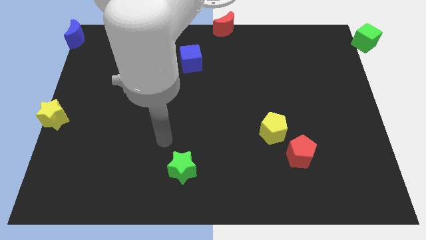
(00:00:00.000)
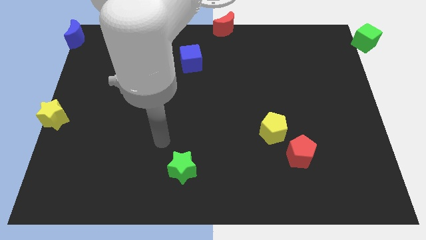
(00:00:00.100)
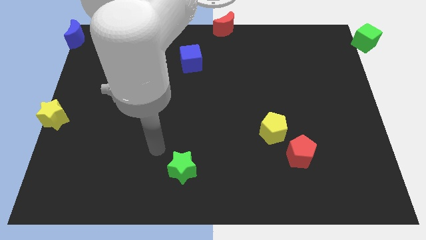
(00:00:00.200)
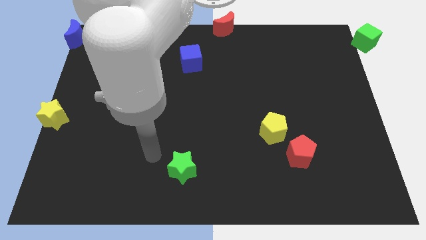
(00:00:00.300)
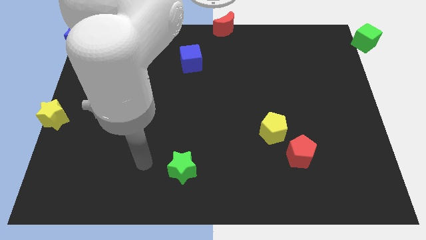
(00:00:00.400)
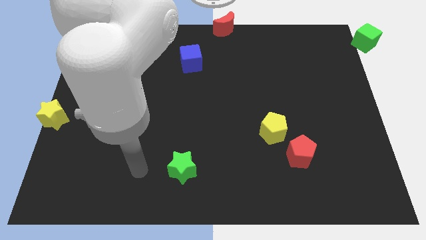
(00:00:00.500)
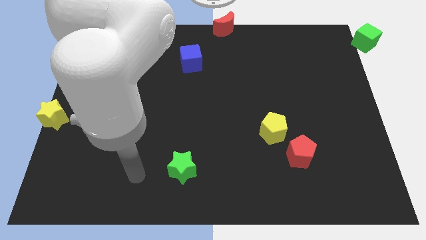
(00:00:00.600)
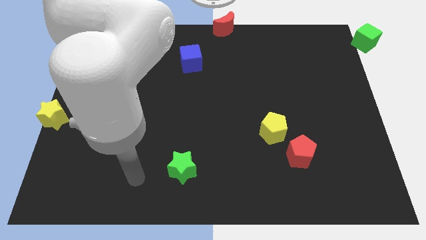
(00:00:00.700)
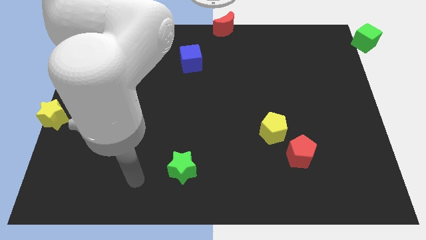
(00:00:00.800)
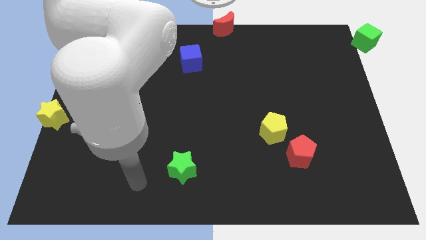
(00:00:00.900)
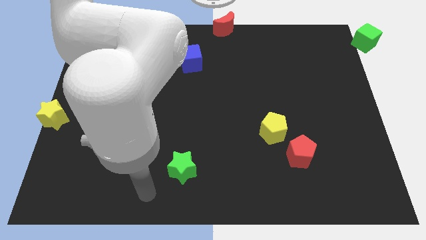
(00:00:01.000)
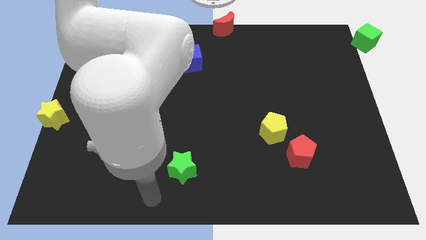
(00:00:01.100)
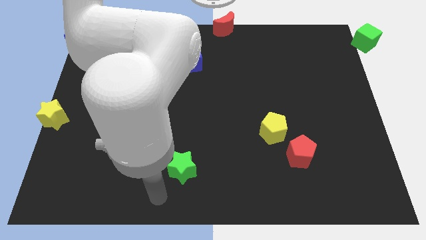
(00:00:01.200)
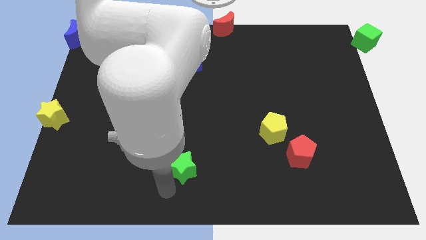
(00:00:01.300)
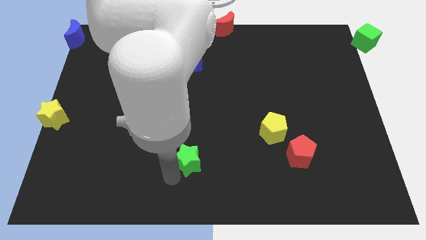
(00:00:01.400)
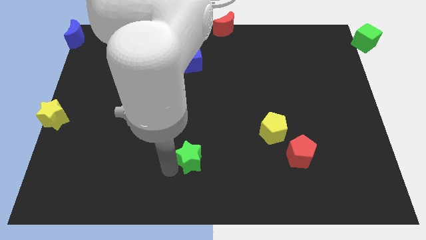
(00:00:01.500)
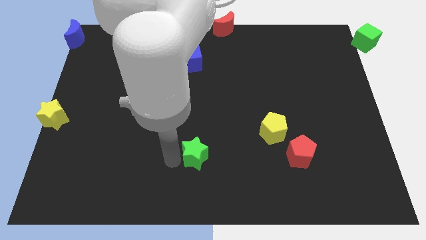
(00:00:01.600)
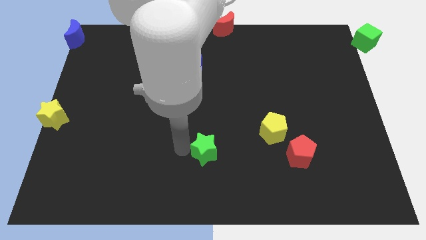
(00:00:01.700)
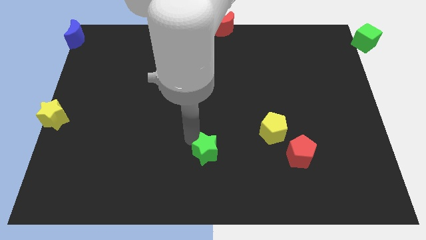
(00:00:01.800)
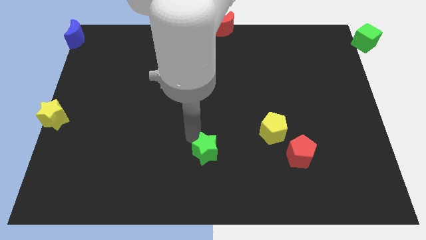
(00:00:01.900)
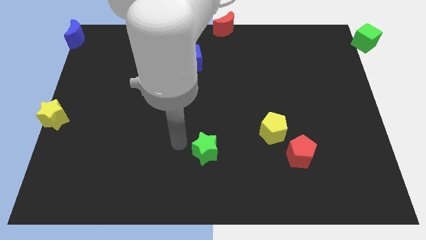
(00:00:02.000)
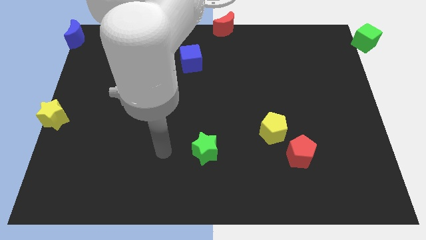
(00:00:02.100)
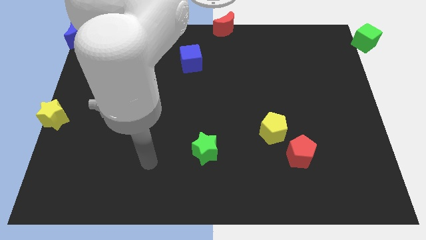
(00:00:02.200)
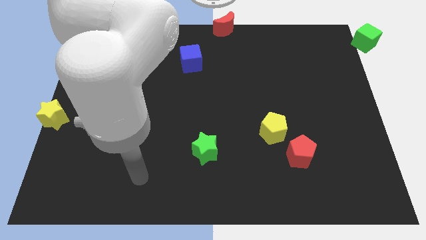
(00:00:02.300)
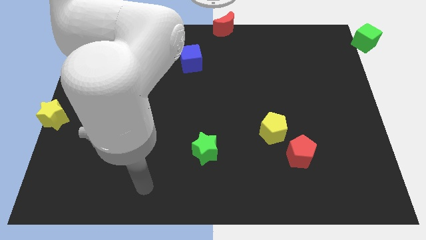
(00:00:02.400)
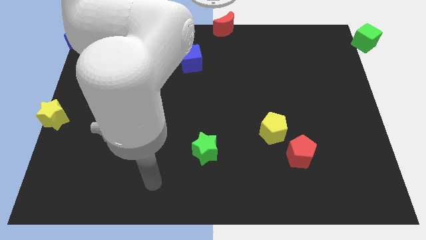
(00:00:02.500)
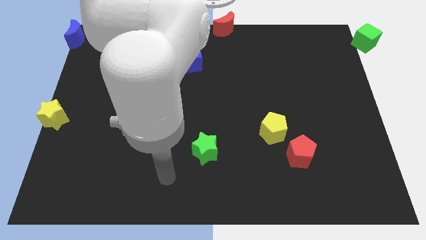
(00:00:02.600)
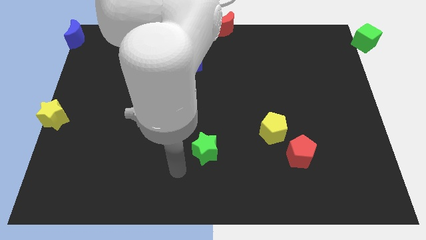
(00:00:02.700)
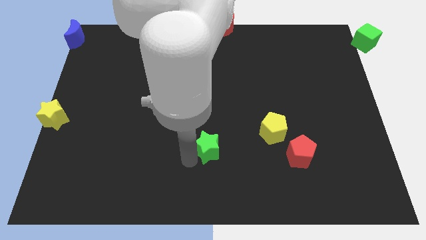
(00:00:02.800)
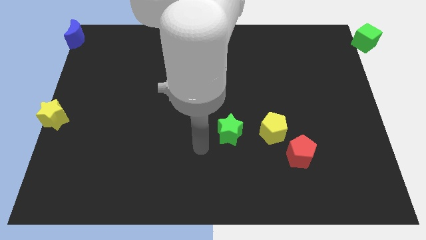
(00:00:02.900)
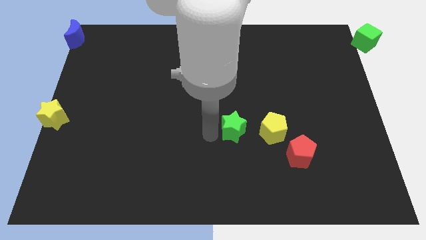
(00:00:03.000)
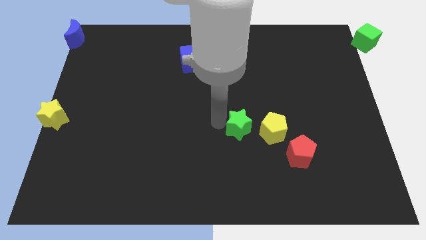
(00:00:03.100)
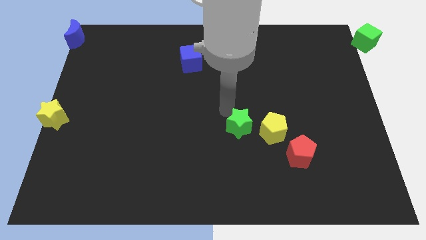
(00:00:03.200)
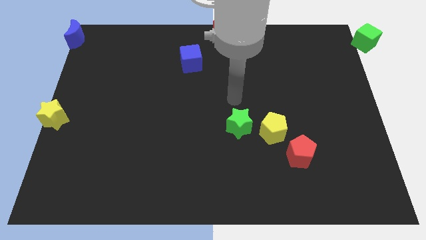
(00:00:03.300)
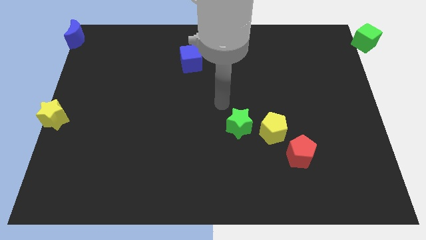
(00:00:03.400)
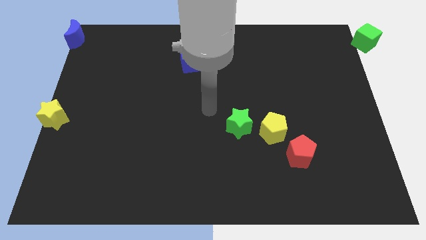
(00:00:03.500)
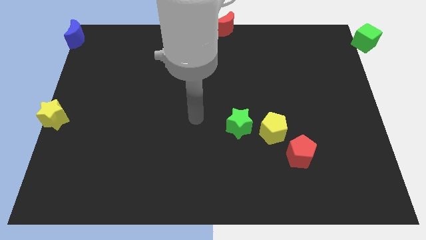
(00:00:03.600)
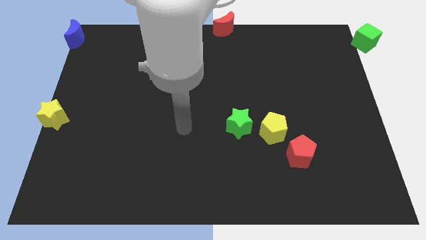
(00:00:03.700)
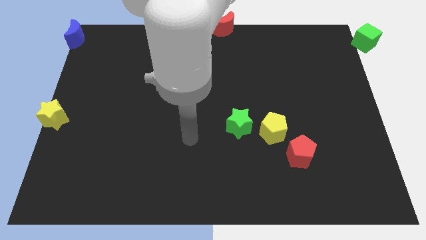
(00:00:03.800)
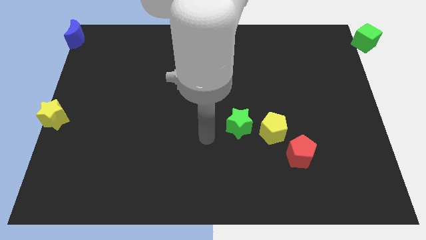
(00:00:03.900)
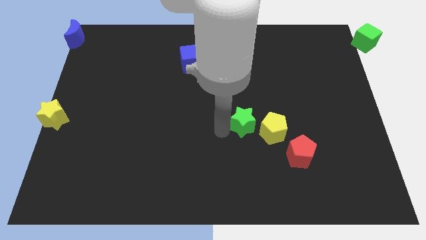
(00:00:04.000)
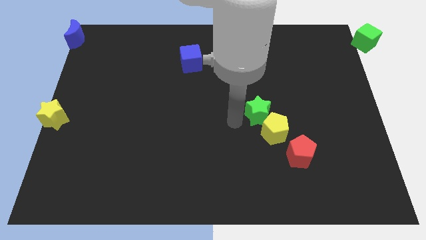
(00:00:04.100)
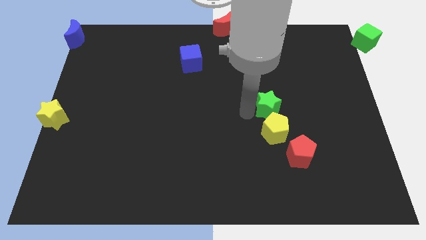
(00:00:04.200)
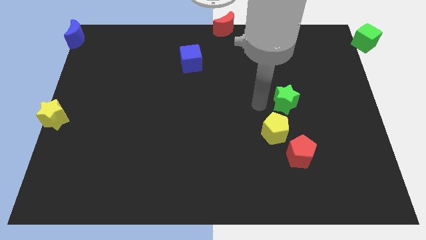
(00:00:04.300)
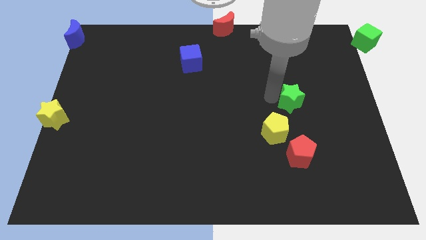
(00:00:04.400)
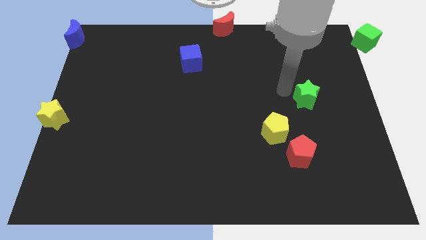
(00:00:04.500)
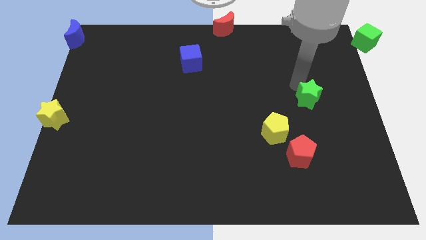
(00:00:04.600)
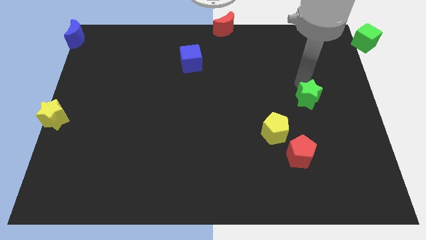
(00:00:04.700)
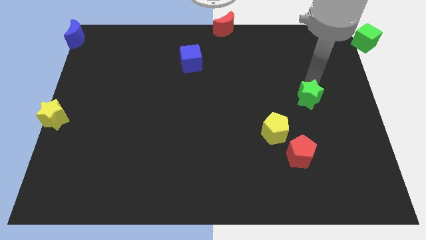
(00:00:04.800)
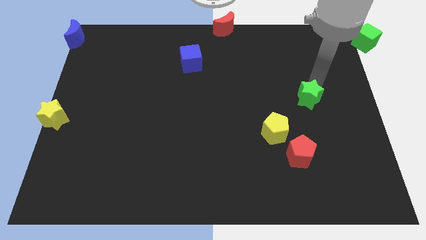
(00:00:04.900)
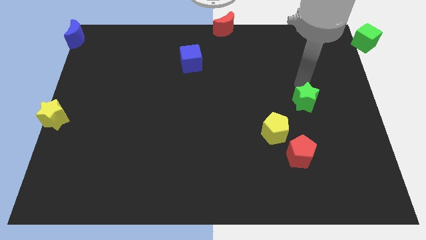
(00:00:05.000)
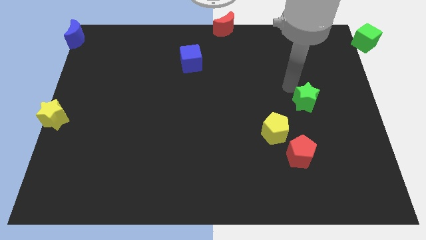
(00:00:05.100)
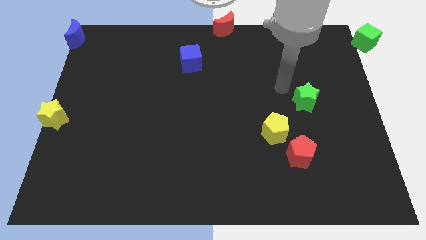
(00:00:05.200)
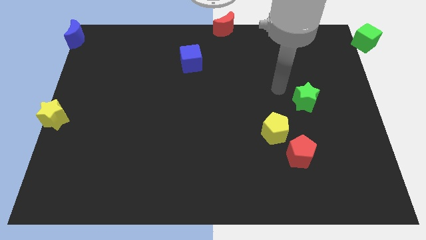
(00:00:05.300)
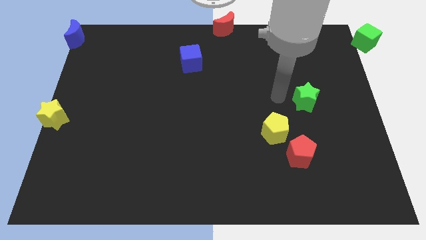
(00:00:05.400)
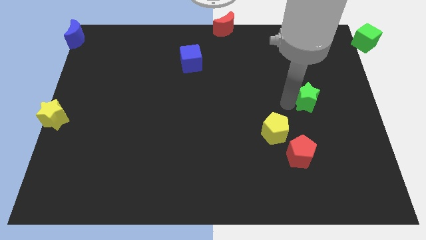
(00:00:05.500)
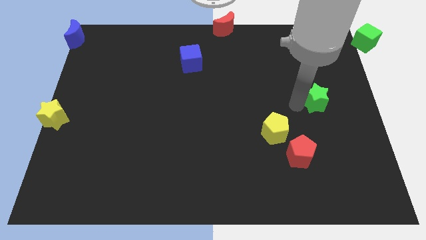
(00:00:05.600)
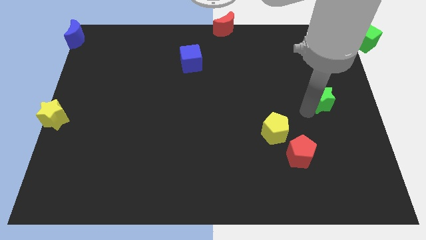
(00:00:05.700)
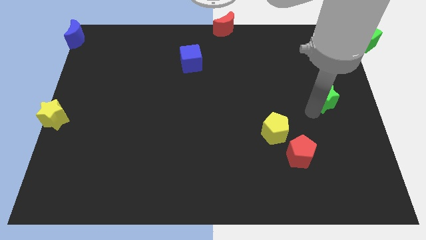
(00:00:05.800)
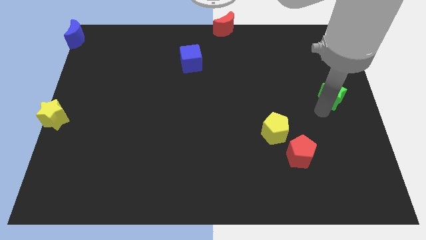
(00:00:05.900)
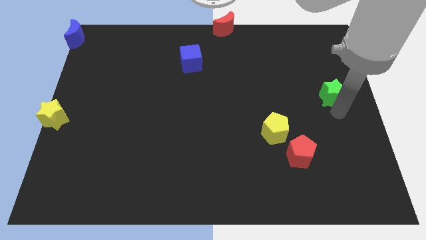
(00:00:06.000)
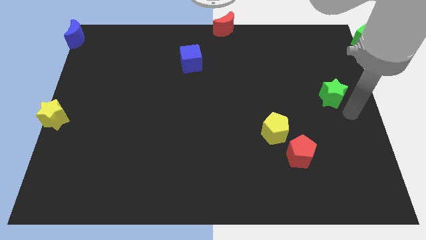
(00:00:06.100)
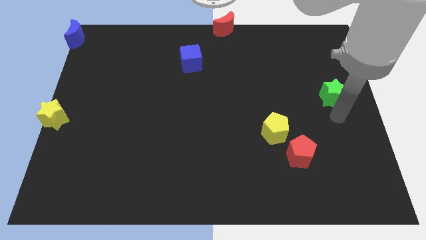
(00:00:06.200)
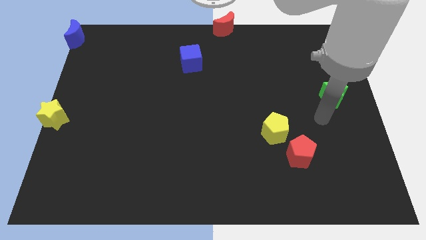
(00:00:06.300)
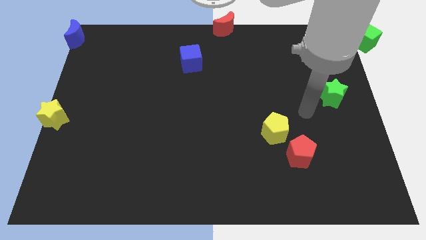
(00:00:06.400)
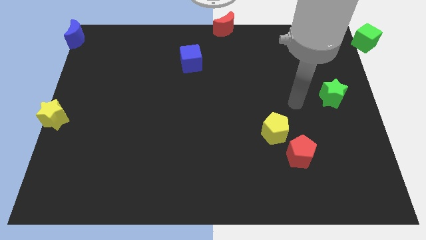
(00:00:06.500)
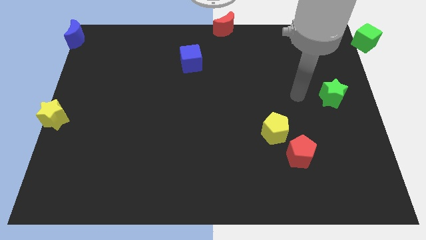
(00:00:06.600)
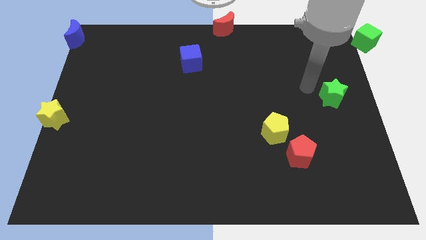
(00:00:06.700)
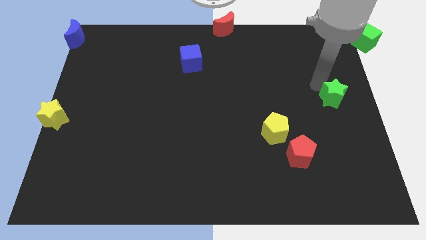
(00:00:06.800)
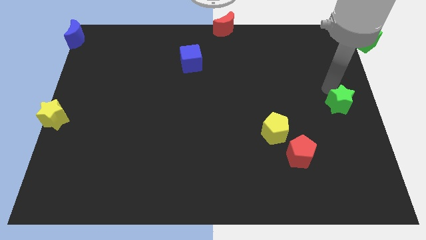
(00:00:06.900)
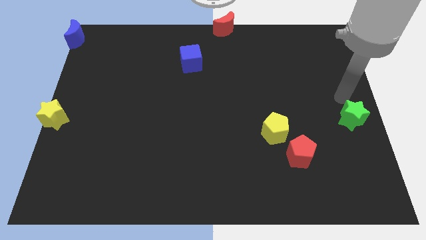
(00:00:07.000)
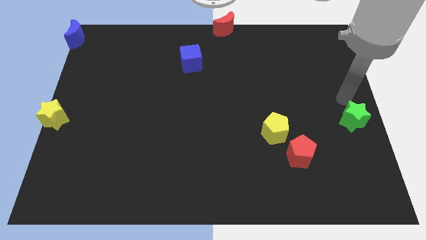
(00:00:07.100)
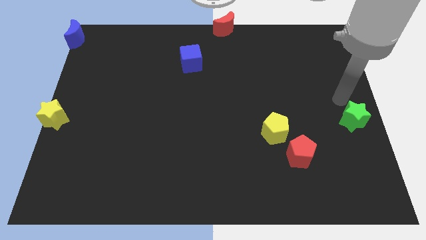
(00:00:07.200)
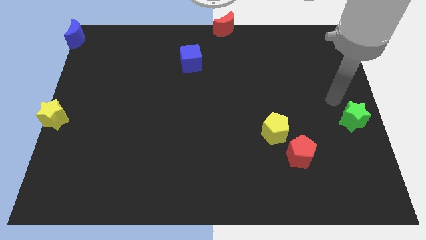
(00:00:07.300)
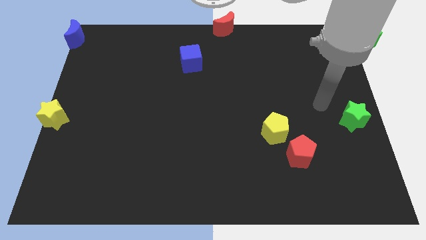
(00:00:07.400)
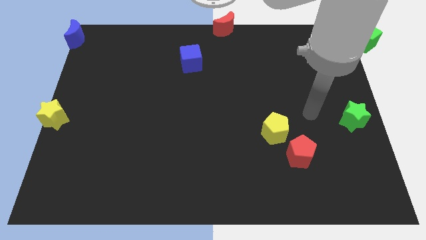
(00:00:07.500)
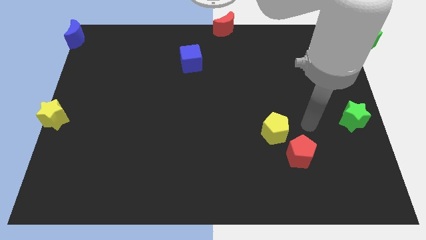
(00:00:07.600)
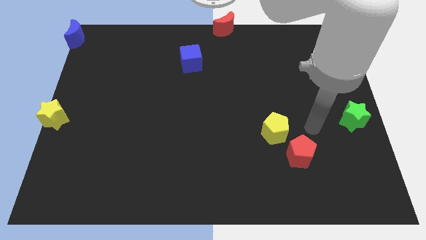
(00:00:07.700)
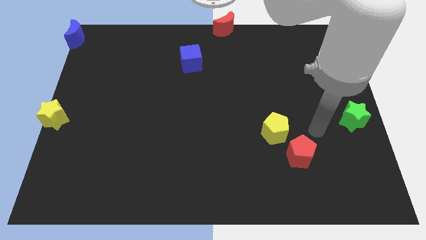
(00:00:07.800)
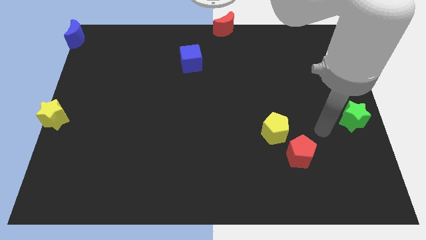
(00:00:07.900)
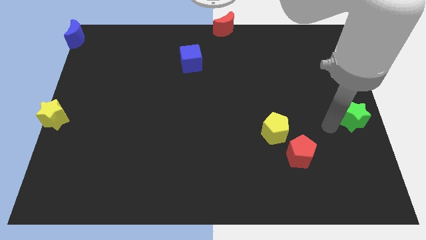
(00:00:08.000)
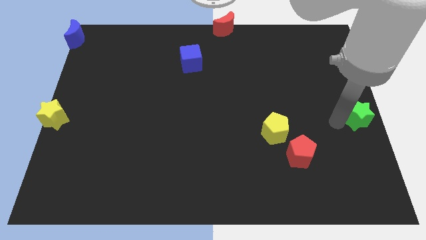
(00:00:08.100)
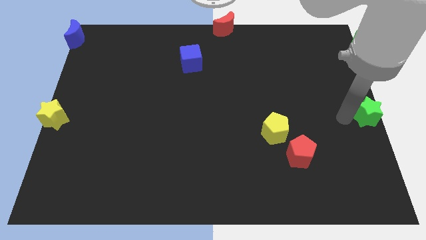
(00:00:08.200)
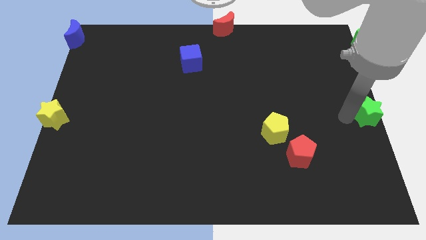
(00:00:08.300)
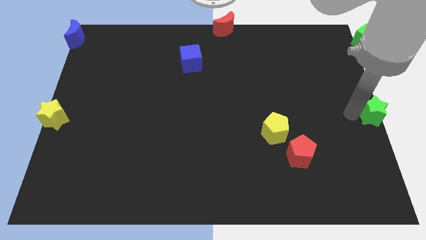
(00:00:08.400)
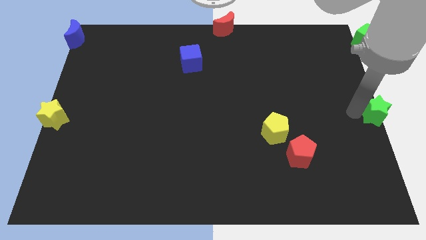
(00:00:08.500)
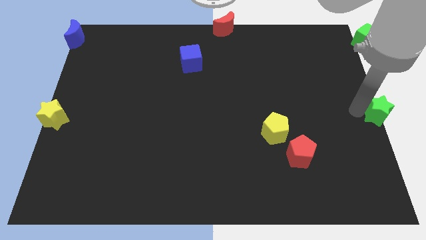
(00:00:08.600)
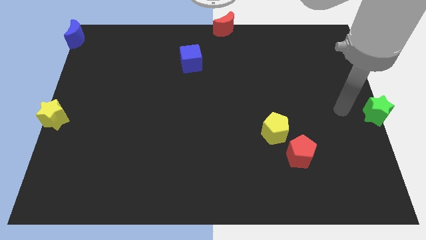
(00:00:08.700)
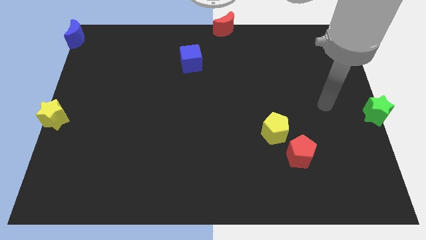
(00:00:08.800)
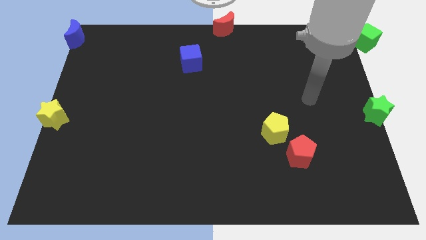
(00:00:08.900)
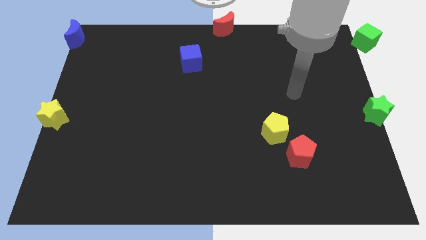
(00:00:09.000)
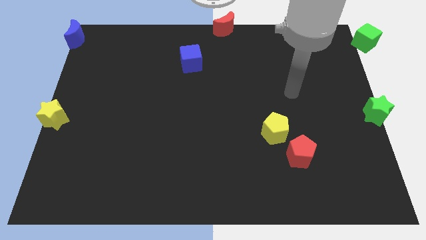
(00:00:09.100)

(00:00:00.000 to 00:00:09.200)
move the green star to the center right of the board
